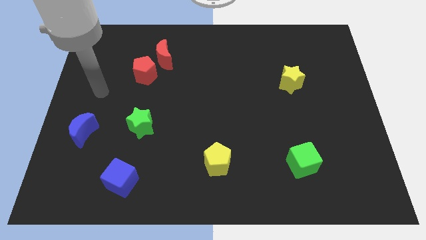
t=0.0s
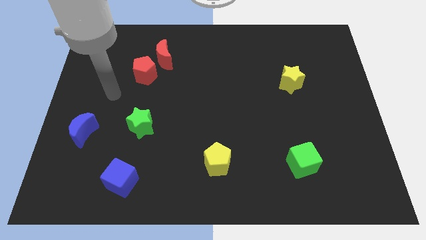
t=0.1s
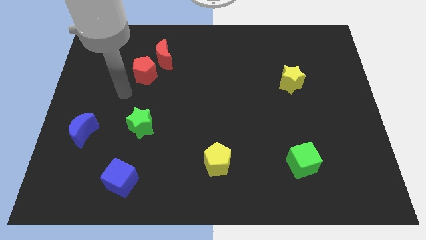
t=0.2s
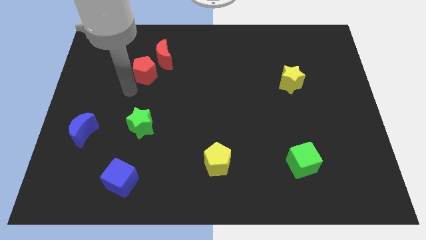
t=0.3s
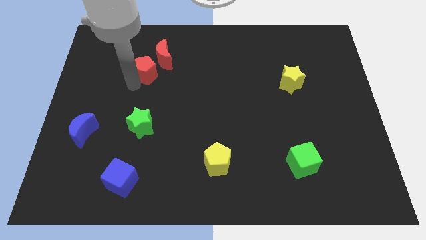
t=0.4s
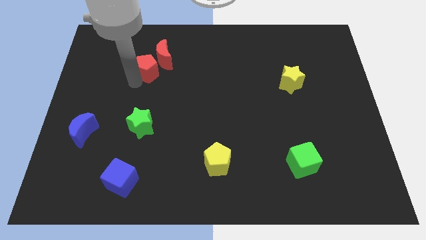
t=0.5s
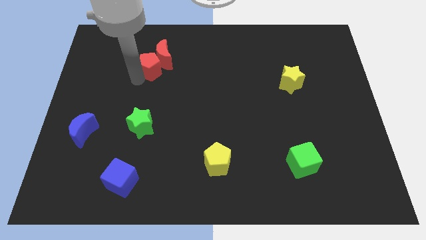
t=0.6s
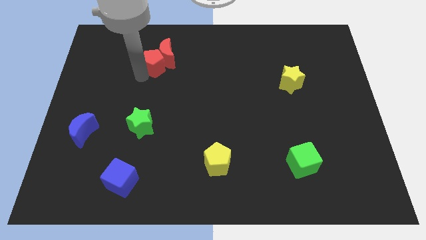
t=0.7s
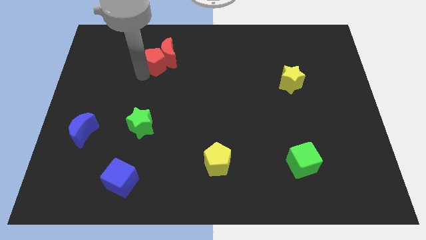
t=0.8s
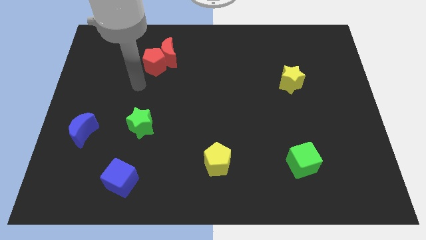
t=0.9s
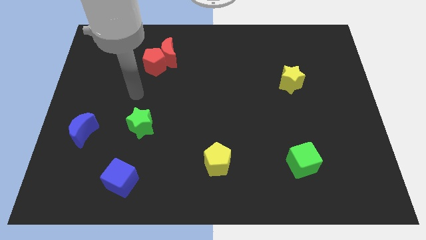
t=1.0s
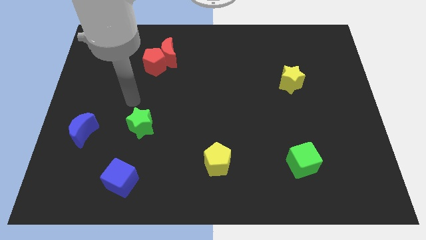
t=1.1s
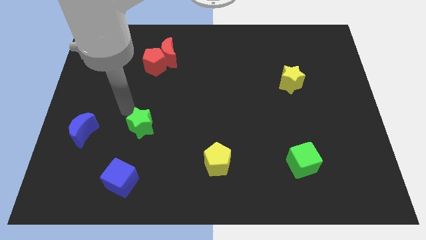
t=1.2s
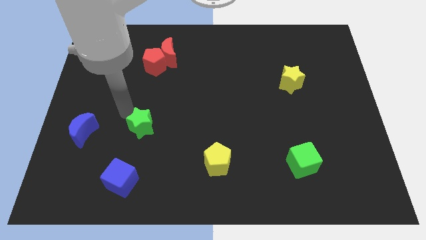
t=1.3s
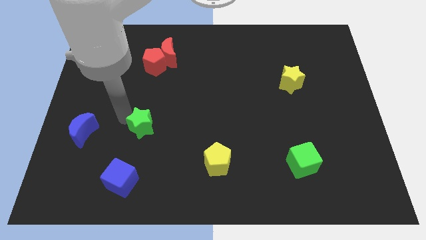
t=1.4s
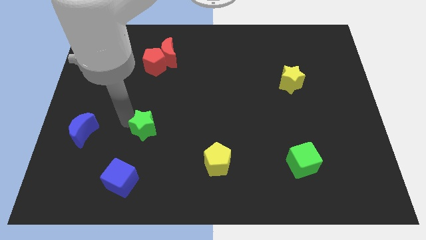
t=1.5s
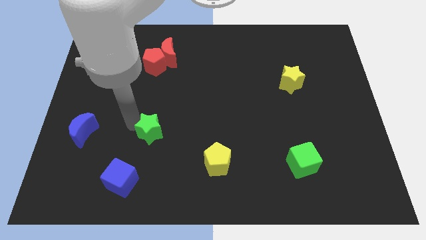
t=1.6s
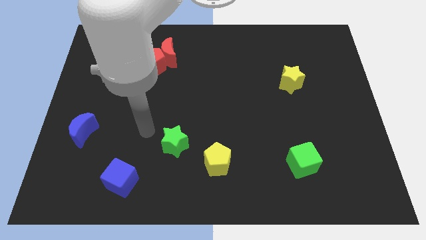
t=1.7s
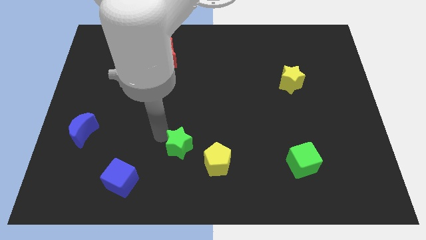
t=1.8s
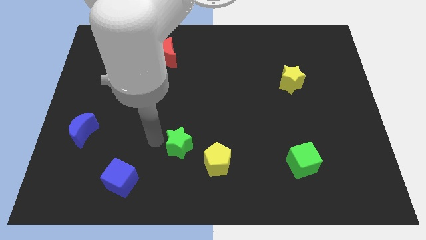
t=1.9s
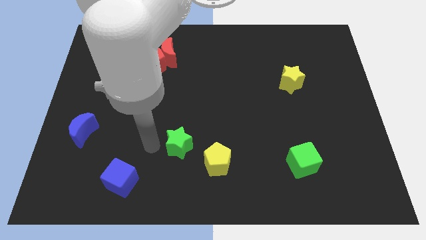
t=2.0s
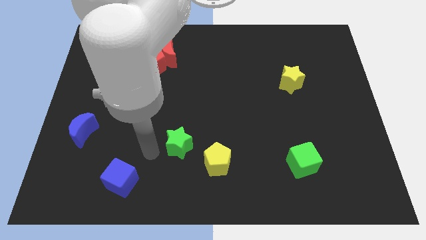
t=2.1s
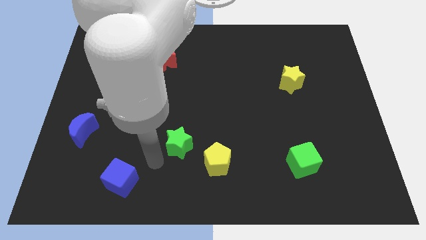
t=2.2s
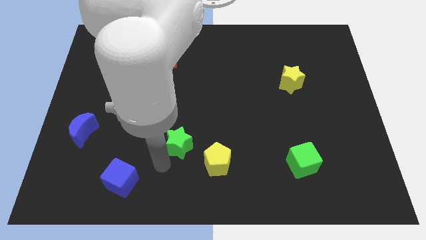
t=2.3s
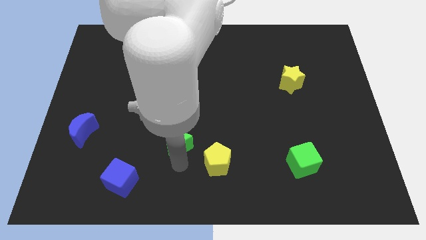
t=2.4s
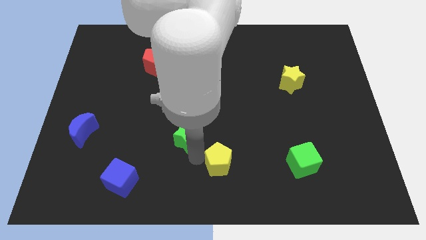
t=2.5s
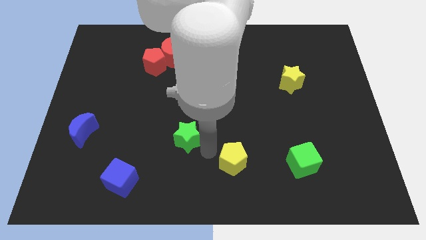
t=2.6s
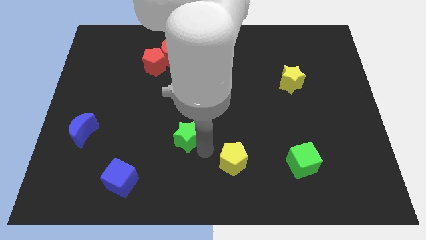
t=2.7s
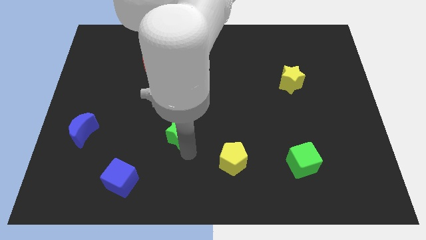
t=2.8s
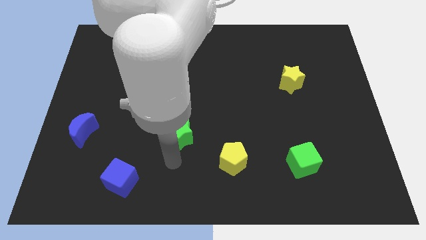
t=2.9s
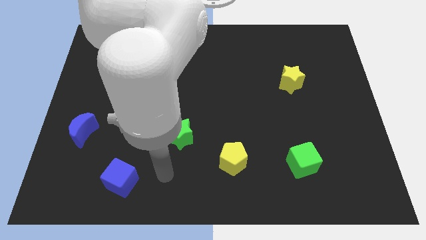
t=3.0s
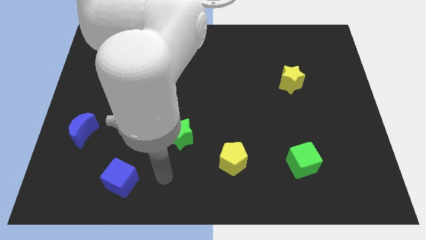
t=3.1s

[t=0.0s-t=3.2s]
push yellow pentagon to the right side

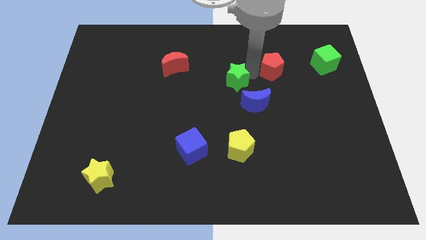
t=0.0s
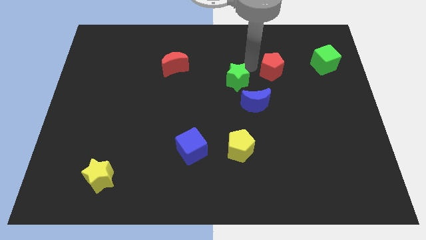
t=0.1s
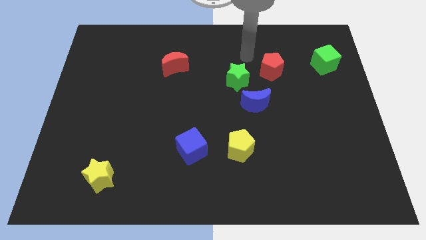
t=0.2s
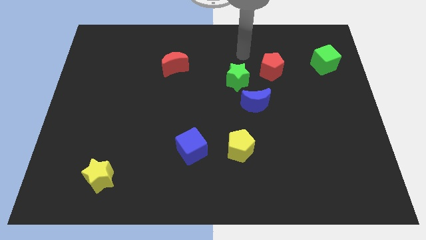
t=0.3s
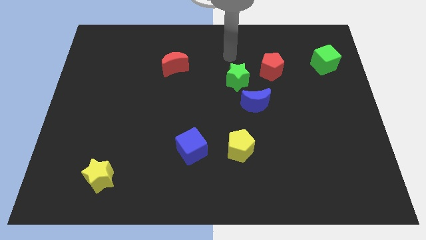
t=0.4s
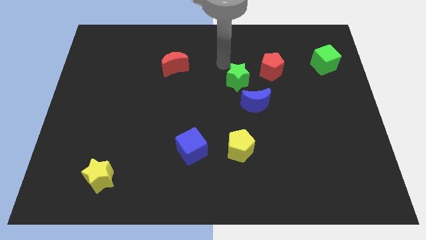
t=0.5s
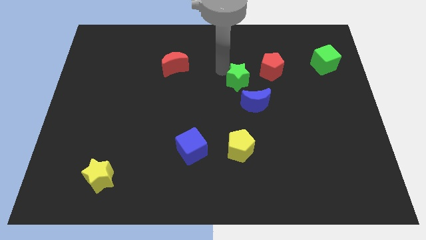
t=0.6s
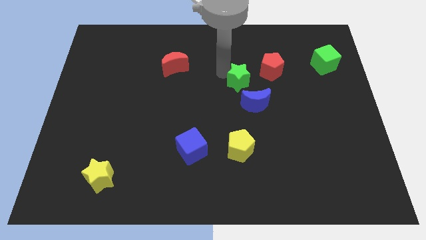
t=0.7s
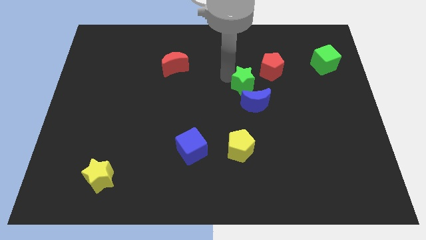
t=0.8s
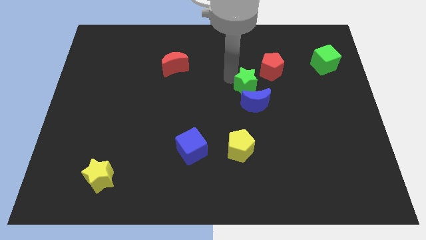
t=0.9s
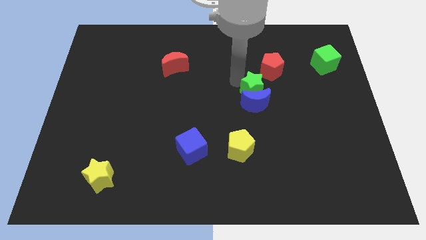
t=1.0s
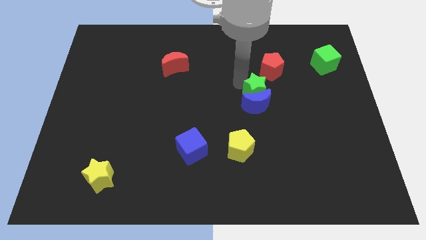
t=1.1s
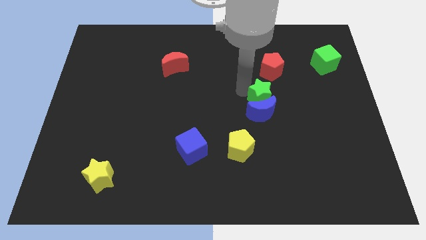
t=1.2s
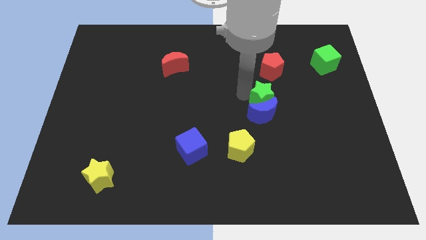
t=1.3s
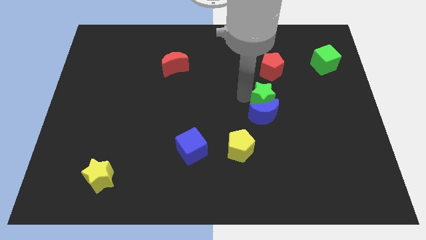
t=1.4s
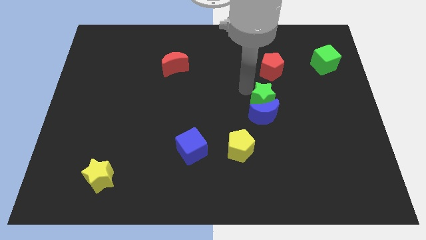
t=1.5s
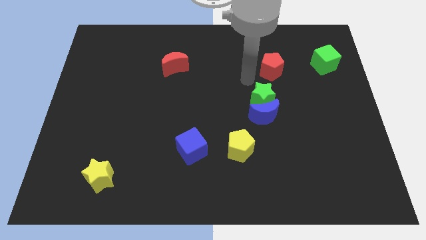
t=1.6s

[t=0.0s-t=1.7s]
push the green star into the blue moon

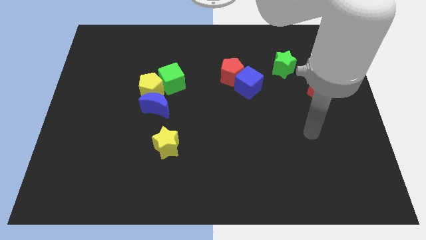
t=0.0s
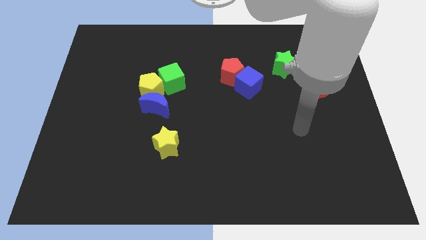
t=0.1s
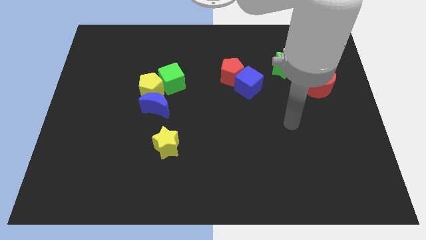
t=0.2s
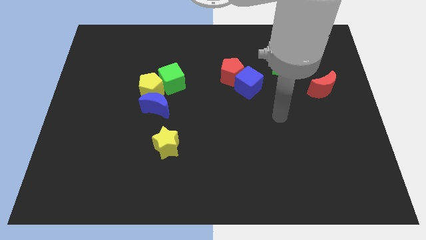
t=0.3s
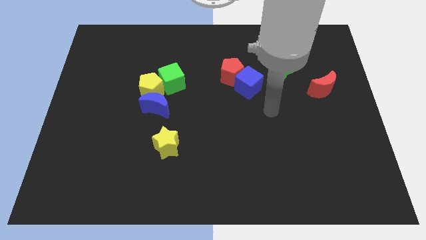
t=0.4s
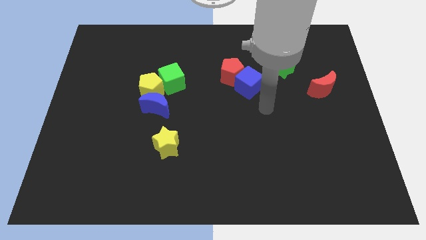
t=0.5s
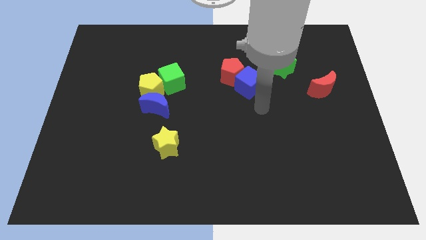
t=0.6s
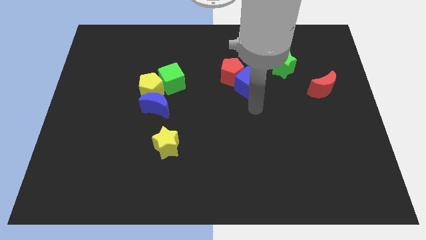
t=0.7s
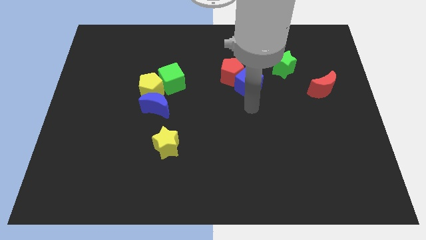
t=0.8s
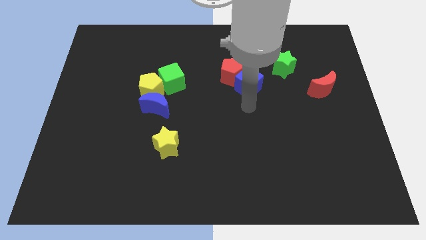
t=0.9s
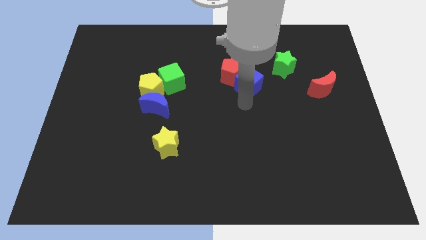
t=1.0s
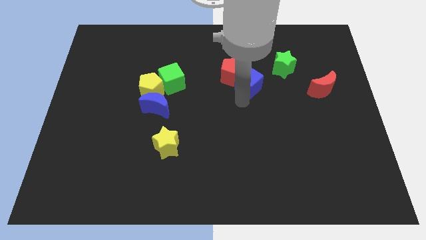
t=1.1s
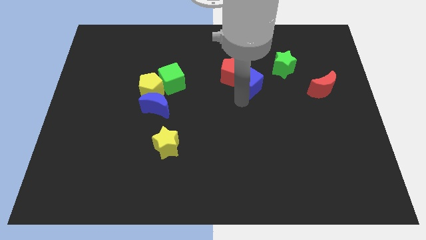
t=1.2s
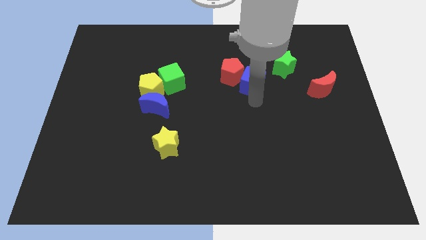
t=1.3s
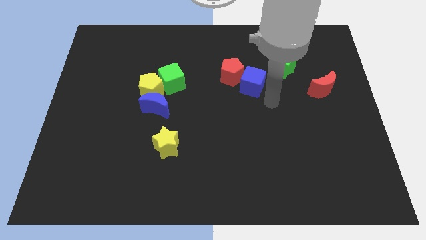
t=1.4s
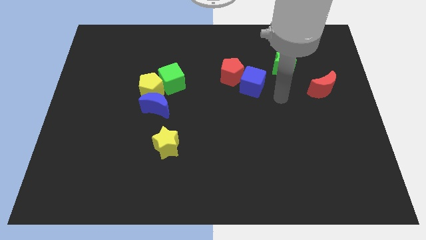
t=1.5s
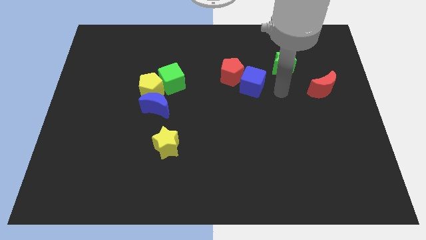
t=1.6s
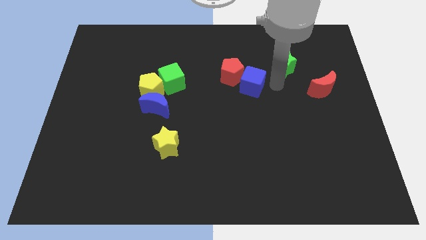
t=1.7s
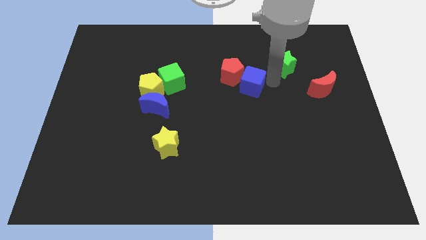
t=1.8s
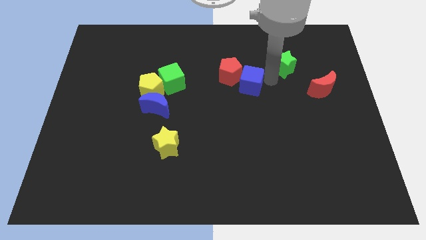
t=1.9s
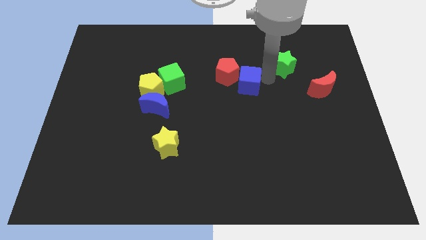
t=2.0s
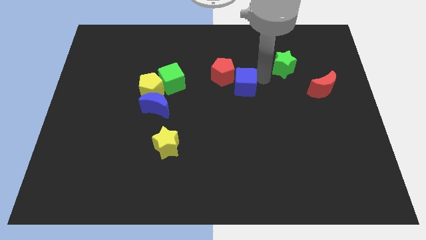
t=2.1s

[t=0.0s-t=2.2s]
move blue cube slightly down

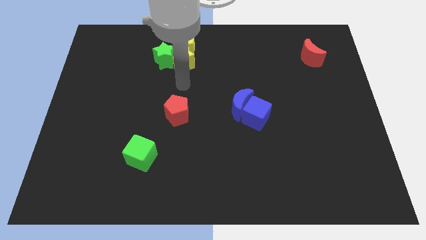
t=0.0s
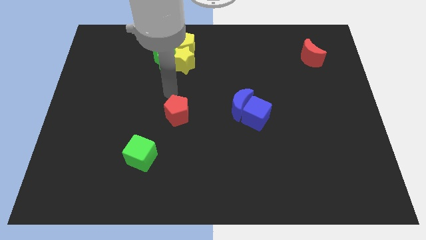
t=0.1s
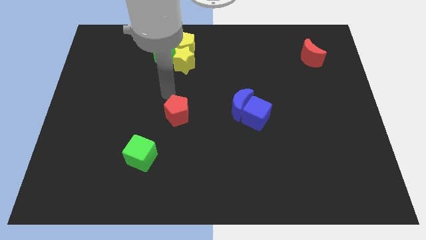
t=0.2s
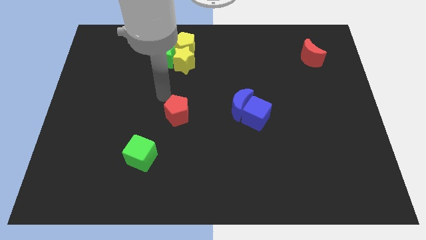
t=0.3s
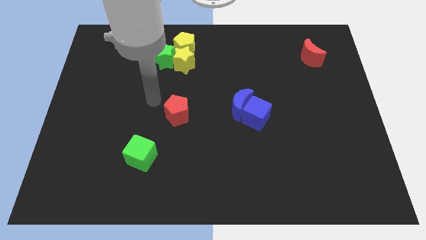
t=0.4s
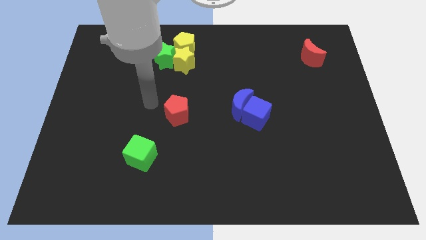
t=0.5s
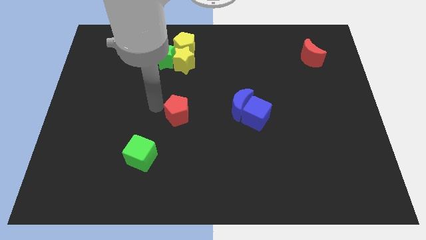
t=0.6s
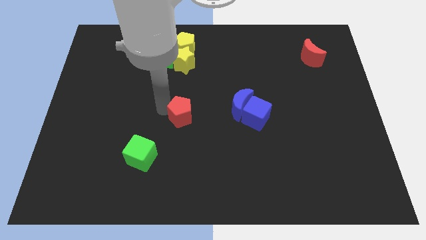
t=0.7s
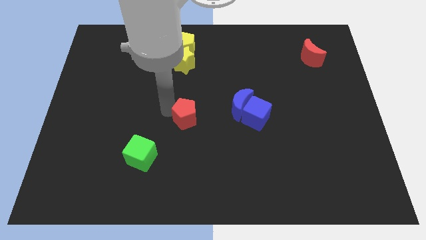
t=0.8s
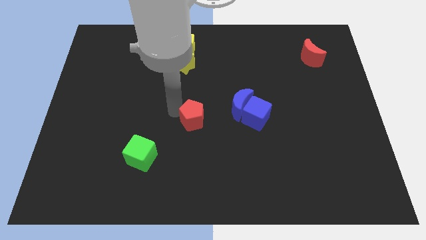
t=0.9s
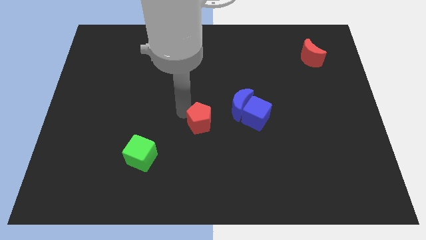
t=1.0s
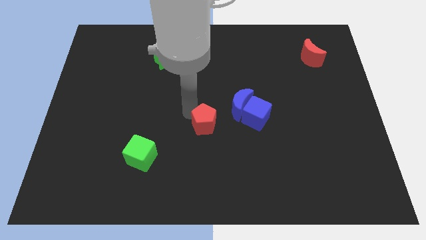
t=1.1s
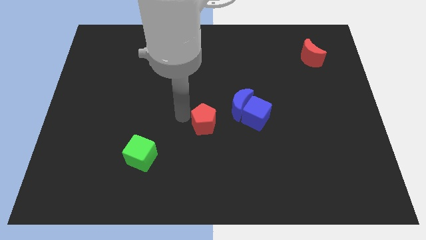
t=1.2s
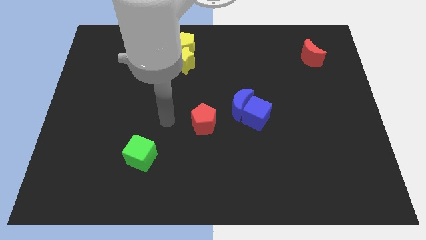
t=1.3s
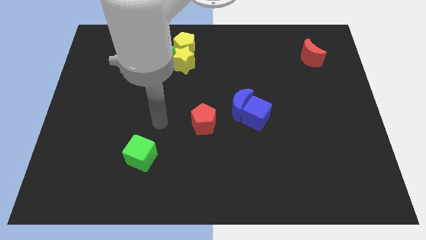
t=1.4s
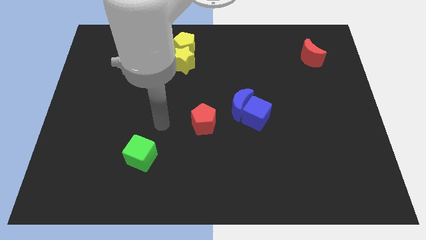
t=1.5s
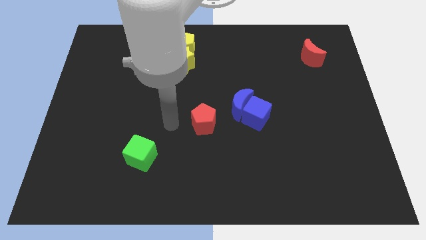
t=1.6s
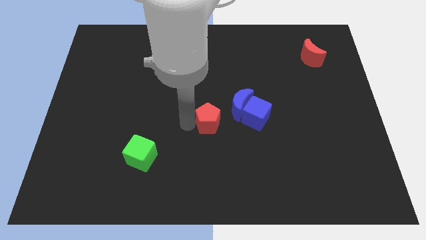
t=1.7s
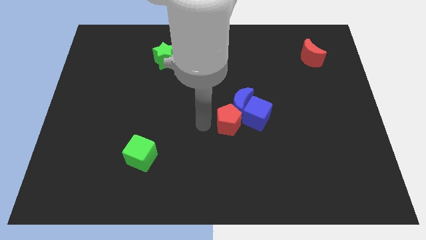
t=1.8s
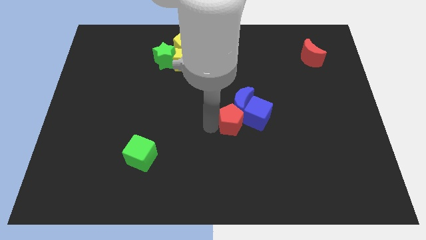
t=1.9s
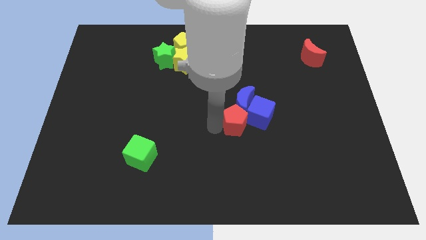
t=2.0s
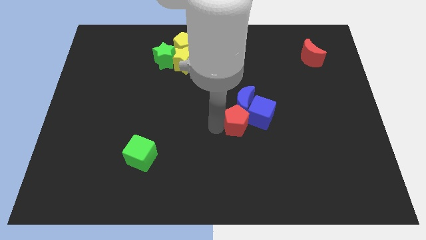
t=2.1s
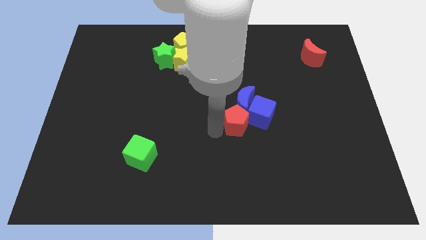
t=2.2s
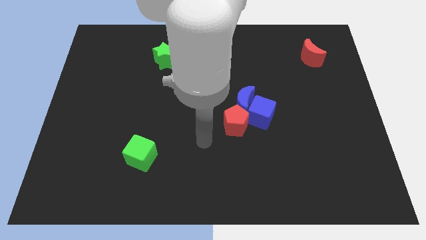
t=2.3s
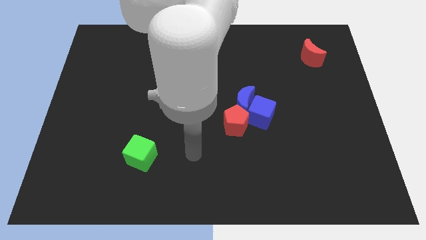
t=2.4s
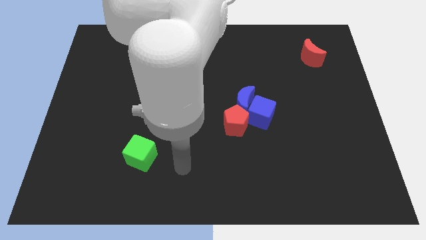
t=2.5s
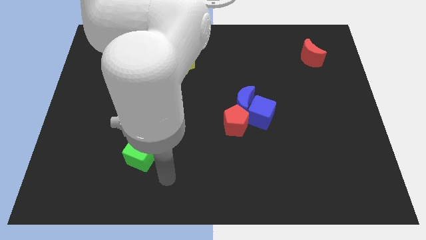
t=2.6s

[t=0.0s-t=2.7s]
place the red penatgon towards the bottom left side of the blue crescent
